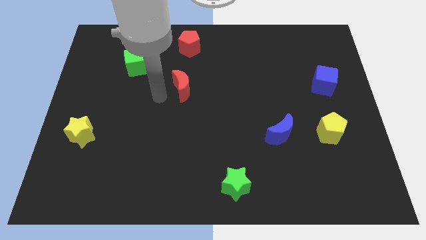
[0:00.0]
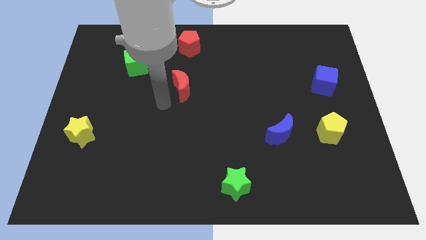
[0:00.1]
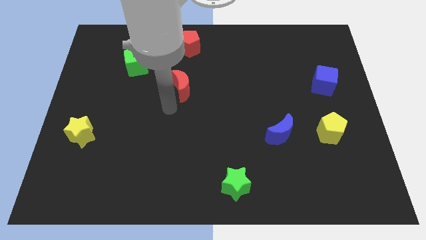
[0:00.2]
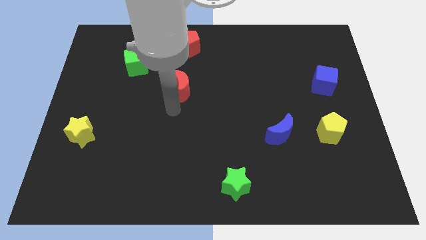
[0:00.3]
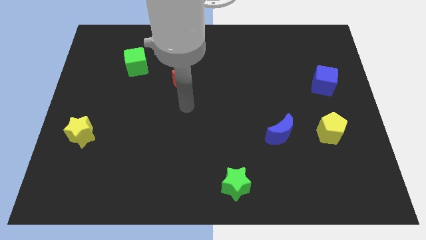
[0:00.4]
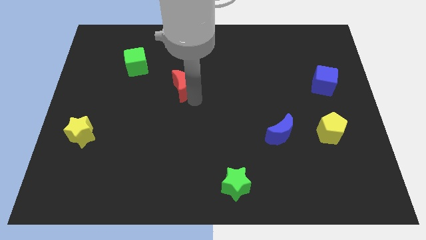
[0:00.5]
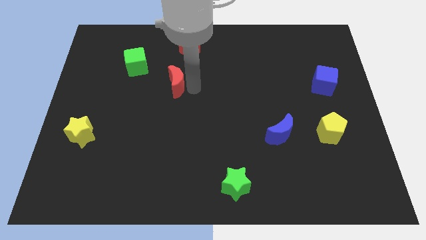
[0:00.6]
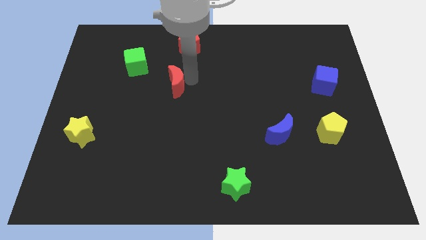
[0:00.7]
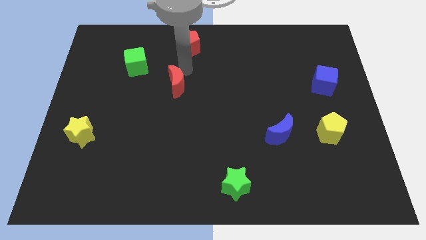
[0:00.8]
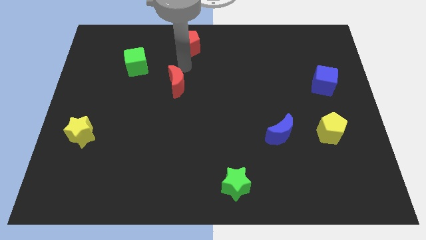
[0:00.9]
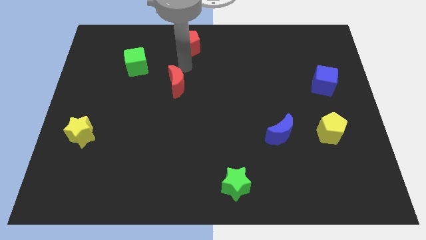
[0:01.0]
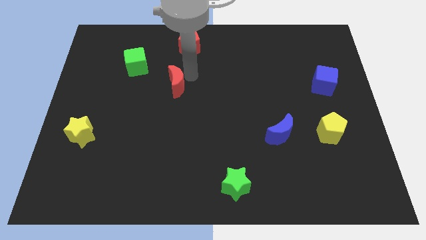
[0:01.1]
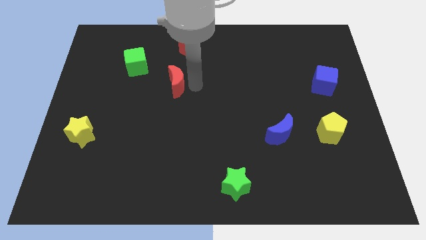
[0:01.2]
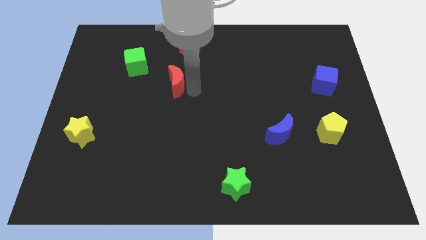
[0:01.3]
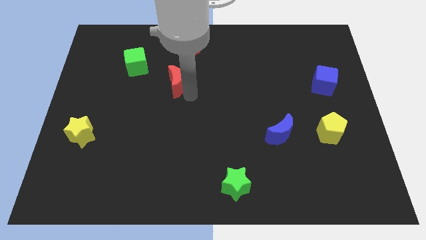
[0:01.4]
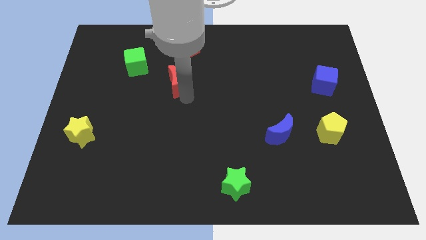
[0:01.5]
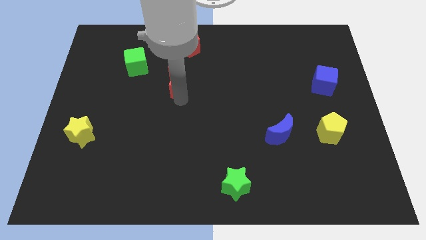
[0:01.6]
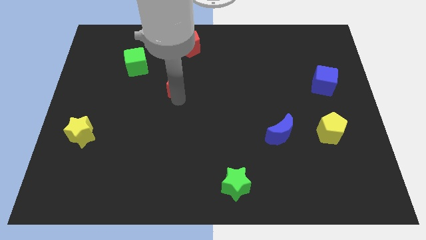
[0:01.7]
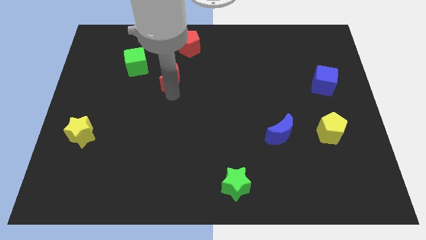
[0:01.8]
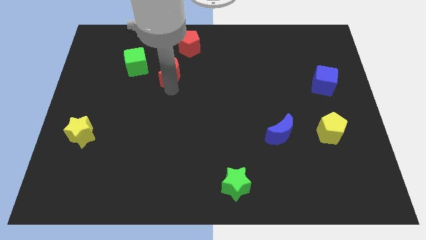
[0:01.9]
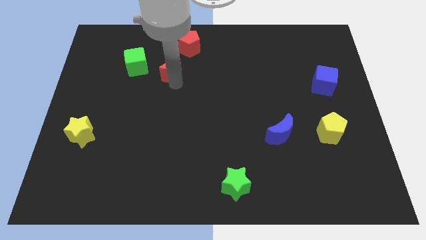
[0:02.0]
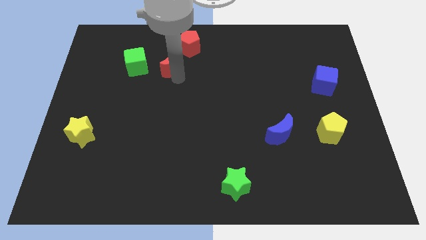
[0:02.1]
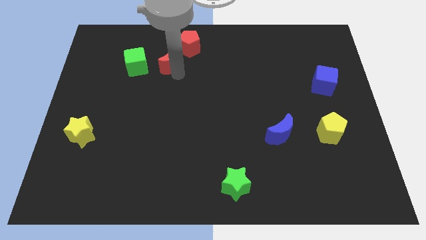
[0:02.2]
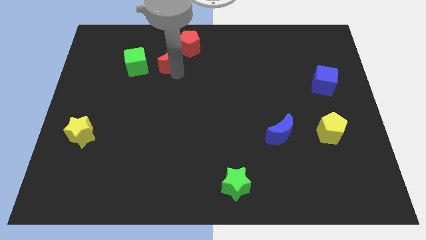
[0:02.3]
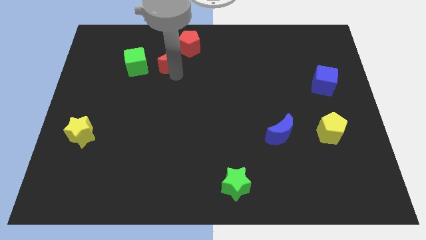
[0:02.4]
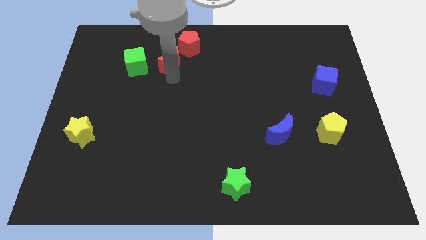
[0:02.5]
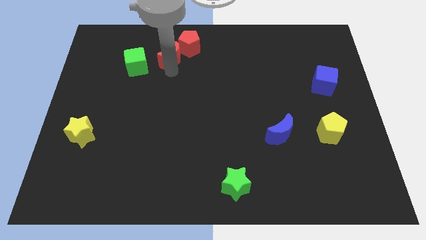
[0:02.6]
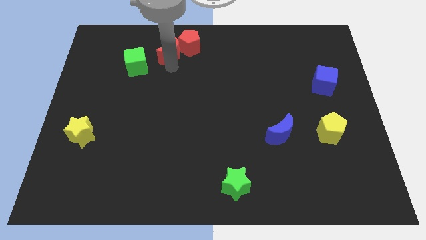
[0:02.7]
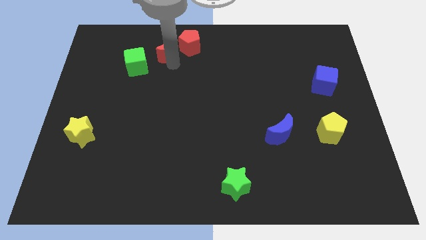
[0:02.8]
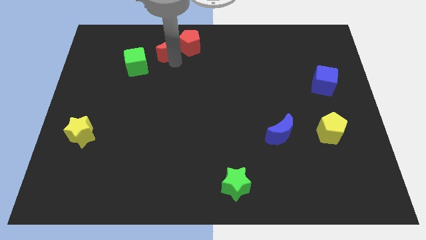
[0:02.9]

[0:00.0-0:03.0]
place the red moon diagonally in between the red pentagon and green cube

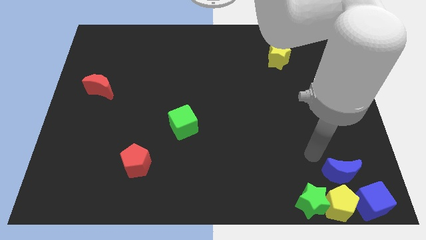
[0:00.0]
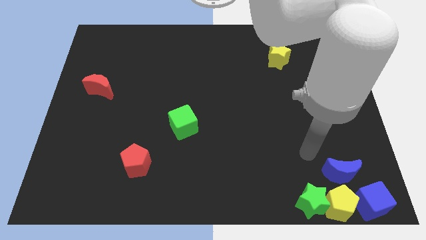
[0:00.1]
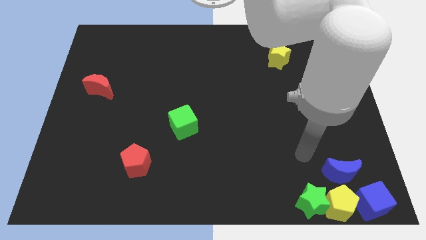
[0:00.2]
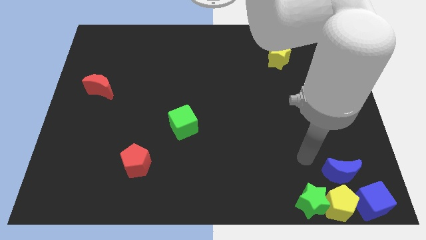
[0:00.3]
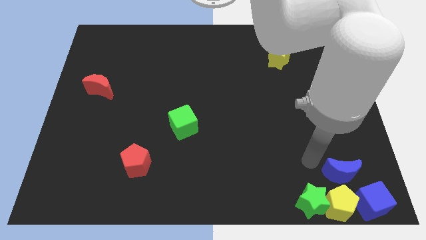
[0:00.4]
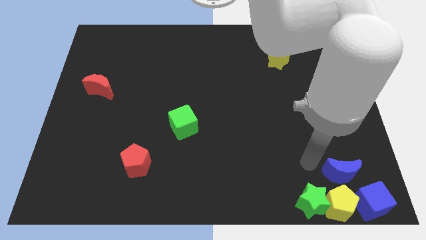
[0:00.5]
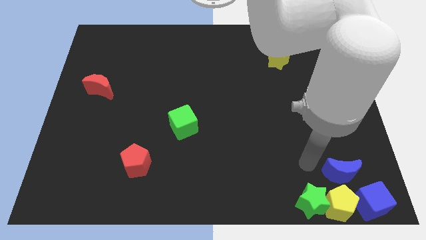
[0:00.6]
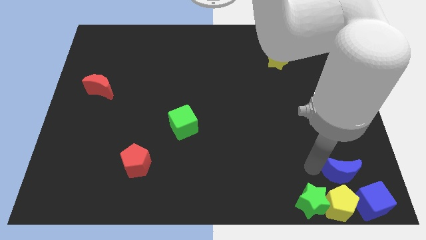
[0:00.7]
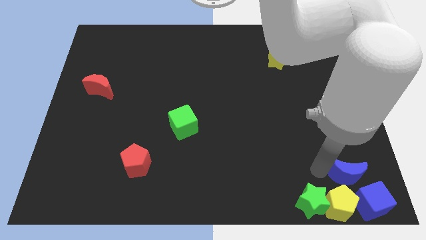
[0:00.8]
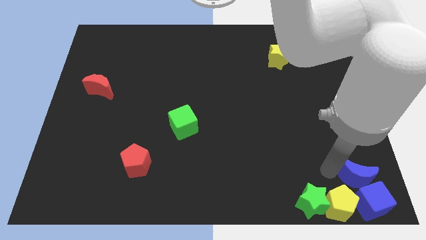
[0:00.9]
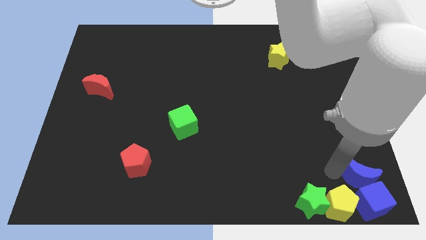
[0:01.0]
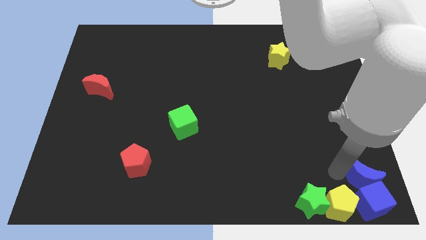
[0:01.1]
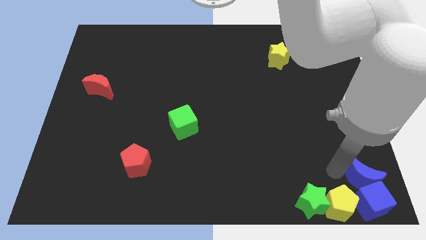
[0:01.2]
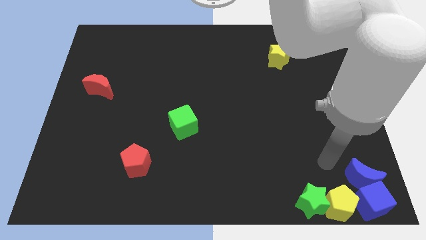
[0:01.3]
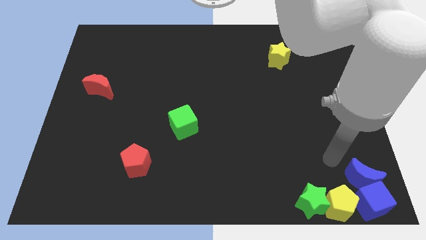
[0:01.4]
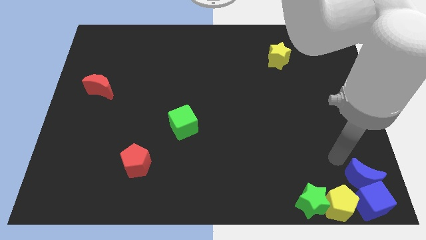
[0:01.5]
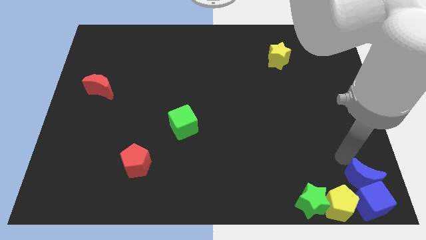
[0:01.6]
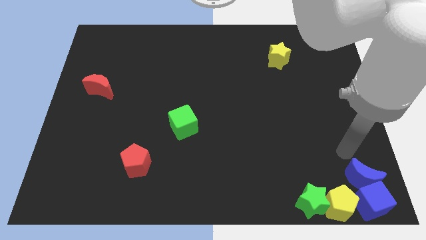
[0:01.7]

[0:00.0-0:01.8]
move the blue moon above the blue cube

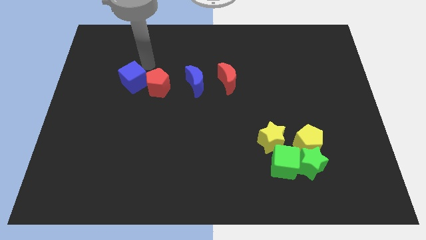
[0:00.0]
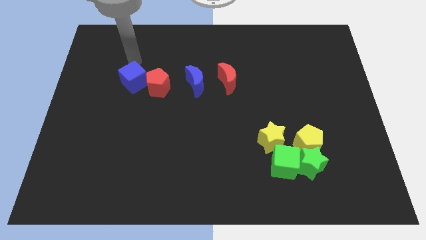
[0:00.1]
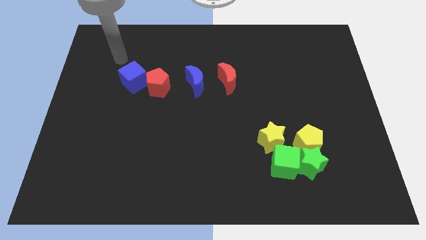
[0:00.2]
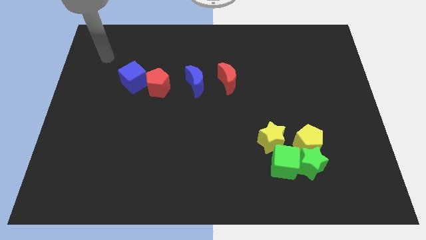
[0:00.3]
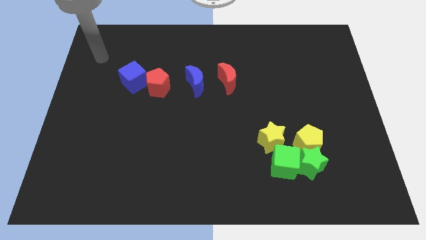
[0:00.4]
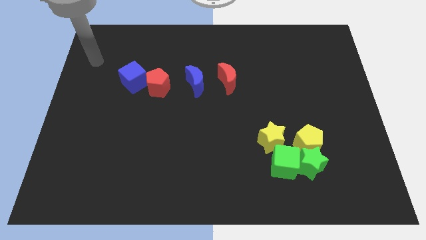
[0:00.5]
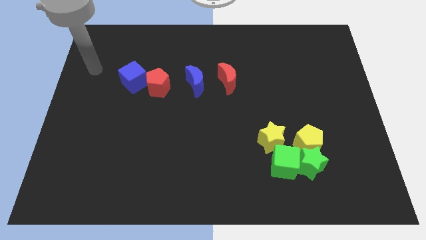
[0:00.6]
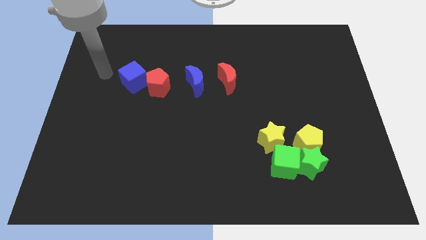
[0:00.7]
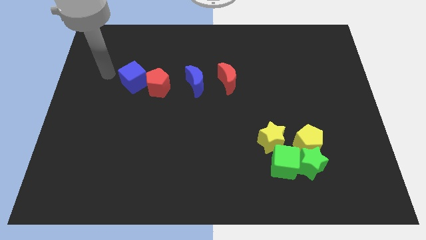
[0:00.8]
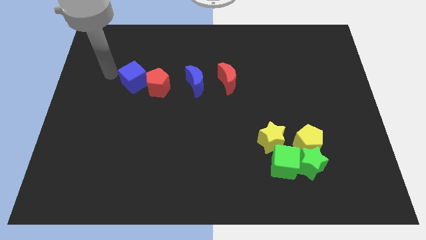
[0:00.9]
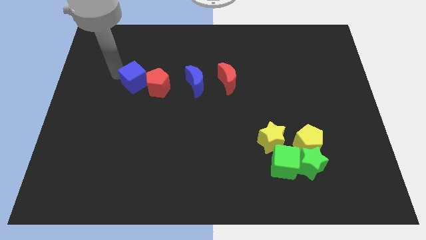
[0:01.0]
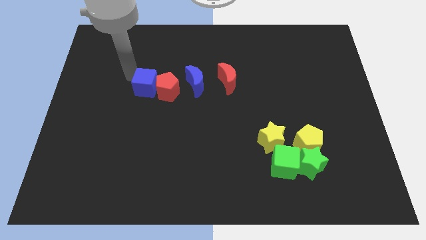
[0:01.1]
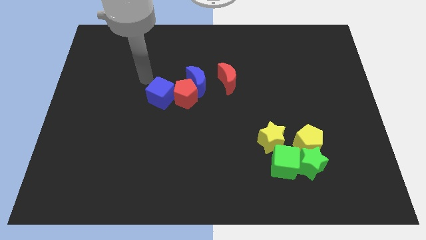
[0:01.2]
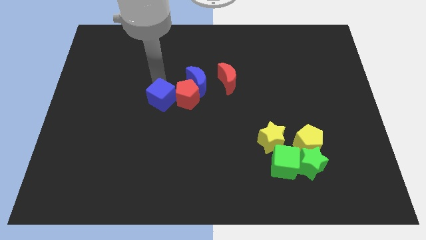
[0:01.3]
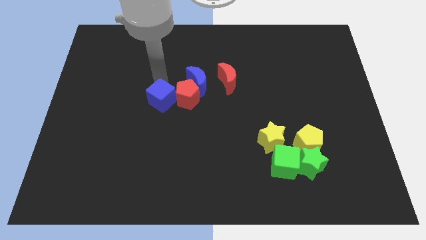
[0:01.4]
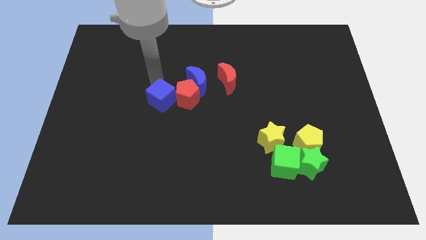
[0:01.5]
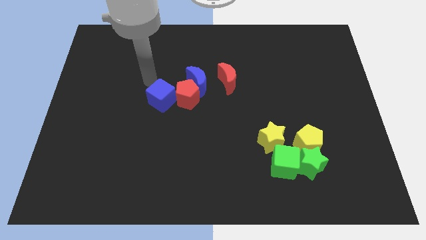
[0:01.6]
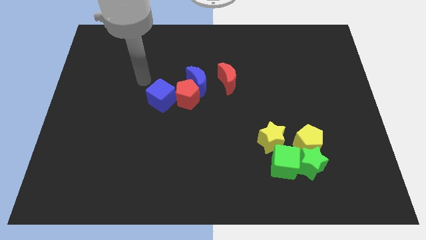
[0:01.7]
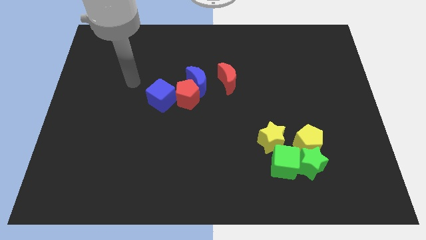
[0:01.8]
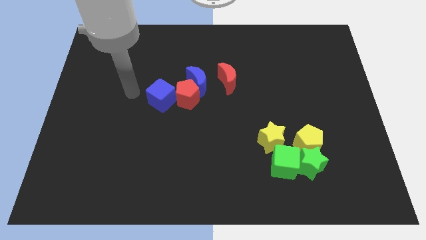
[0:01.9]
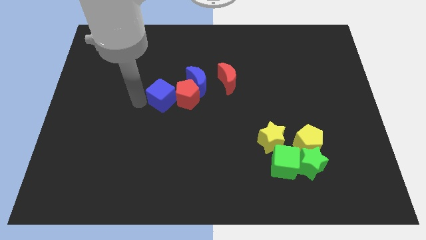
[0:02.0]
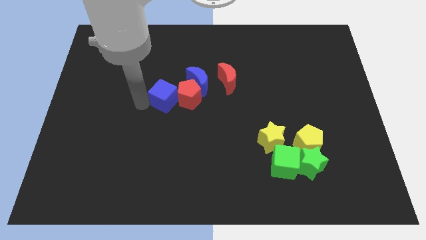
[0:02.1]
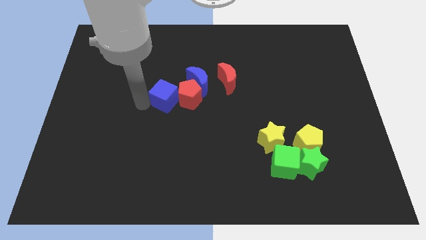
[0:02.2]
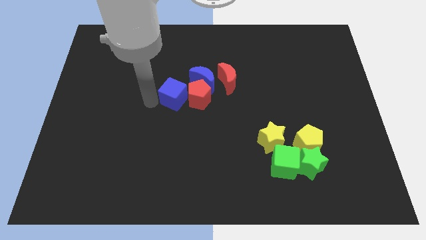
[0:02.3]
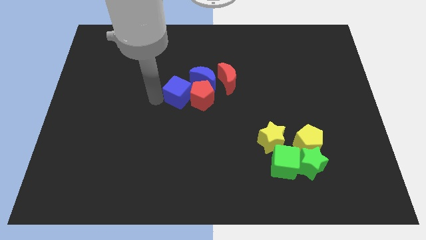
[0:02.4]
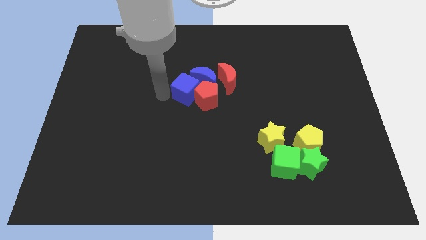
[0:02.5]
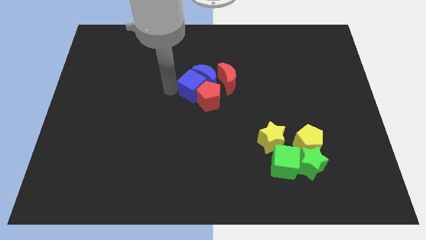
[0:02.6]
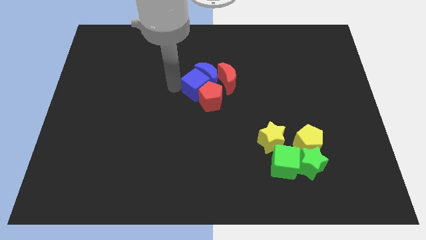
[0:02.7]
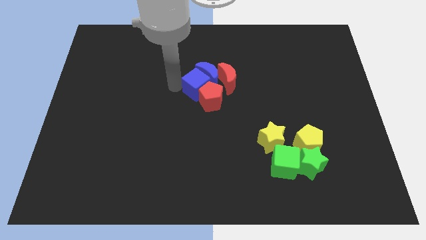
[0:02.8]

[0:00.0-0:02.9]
push the blue cube along with the red pentagon into the blue crescent

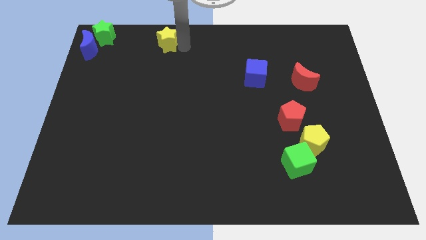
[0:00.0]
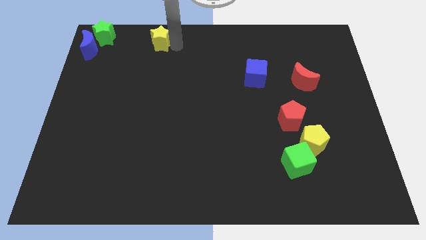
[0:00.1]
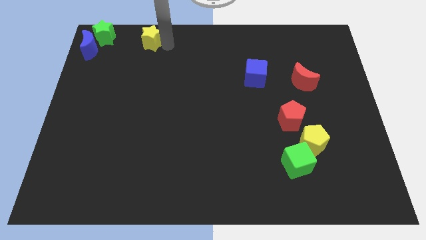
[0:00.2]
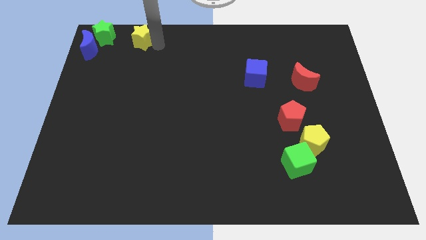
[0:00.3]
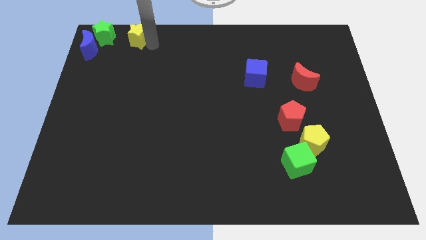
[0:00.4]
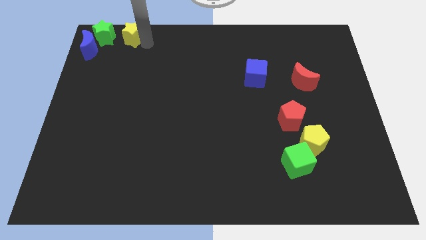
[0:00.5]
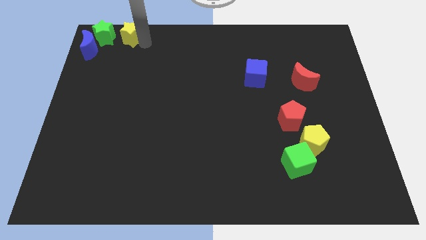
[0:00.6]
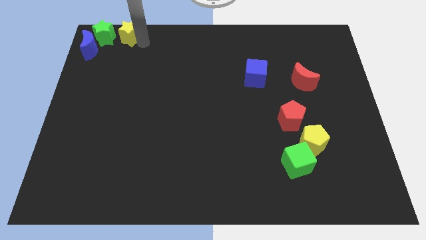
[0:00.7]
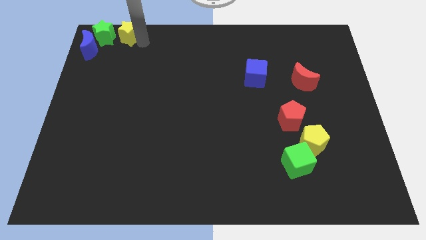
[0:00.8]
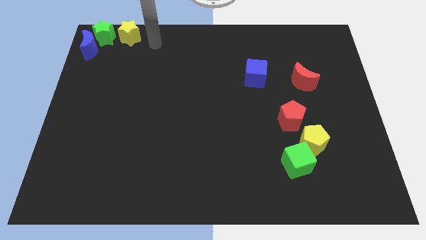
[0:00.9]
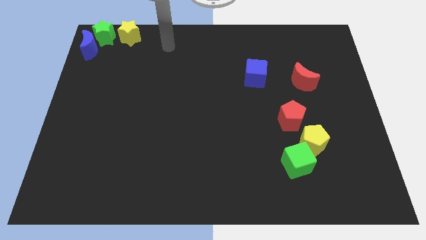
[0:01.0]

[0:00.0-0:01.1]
push yellow star towards the top left corner of the board

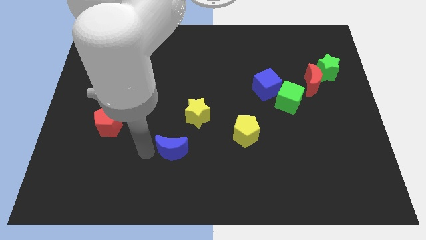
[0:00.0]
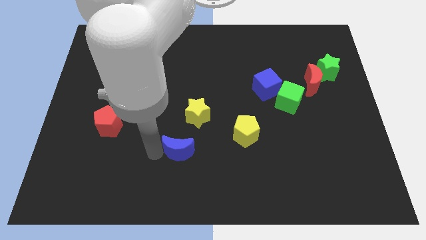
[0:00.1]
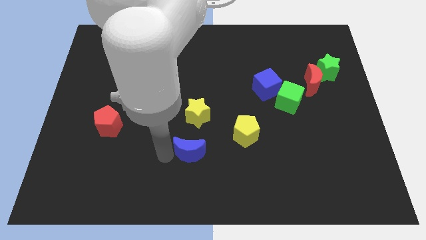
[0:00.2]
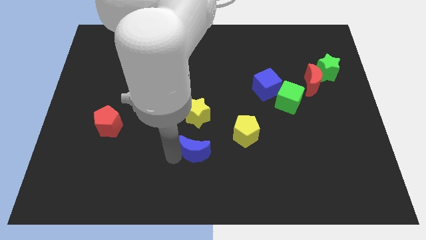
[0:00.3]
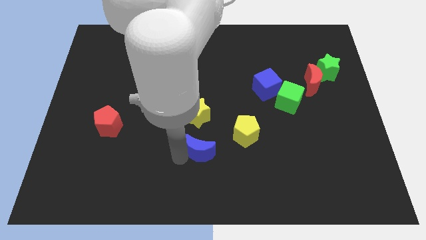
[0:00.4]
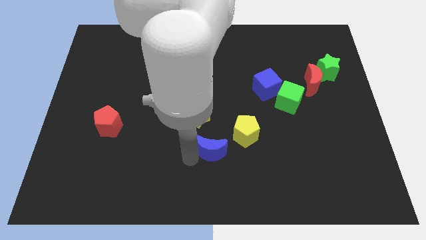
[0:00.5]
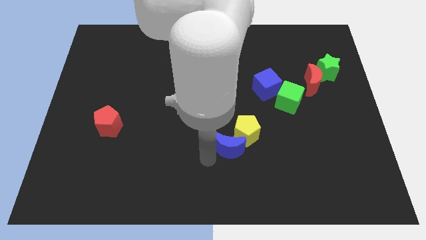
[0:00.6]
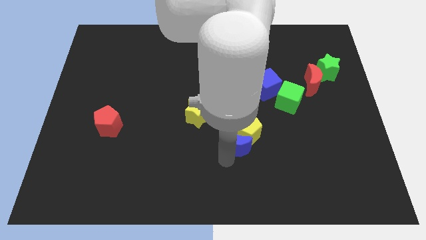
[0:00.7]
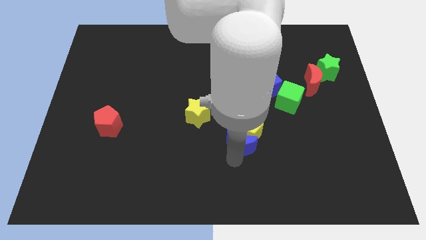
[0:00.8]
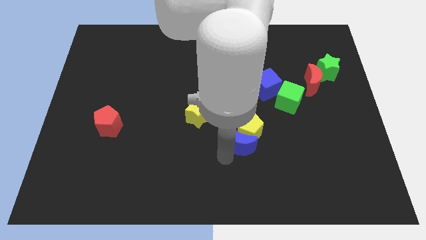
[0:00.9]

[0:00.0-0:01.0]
move the blue crescent towards the yellow pentagon
